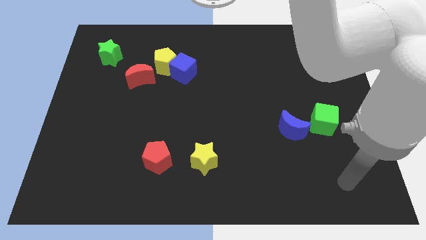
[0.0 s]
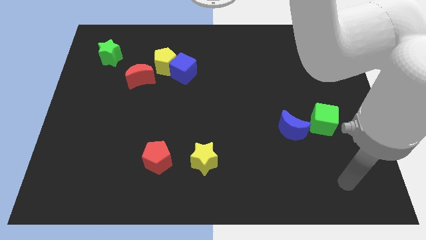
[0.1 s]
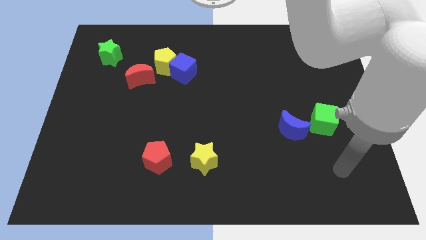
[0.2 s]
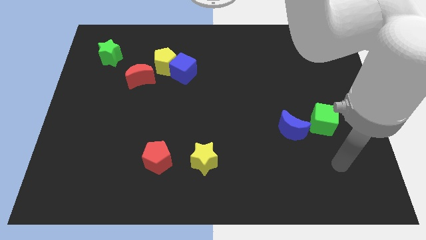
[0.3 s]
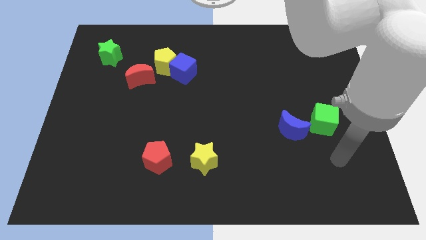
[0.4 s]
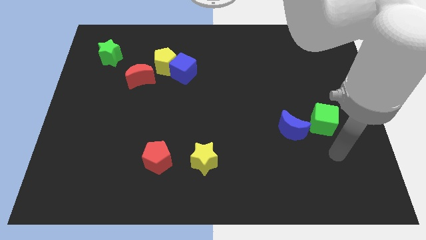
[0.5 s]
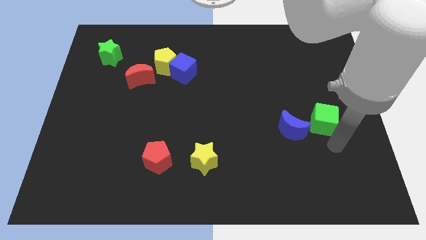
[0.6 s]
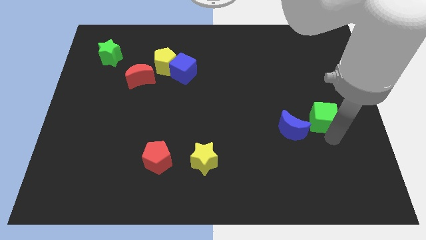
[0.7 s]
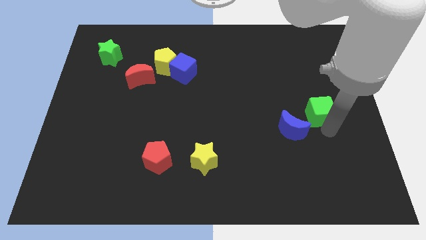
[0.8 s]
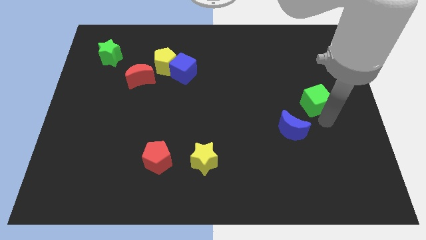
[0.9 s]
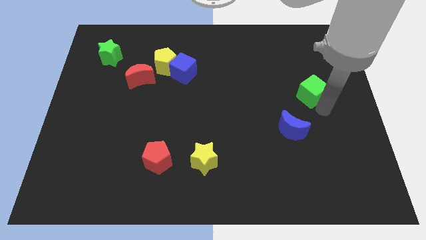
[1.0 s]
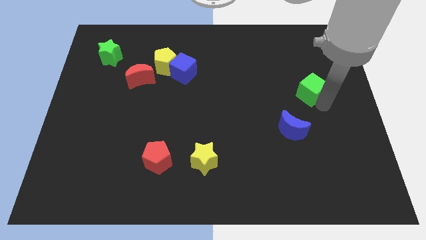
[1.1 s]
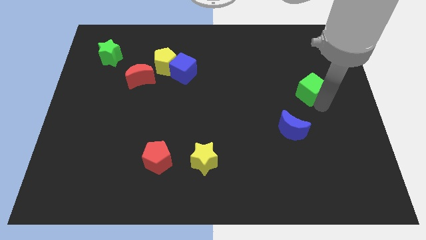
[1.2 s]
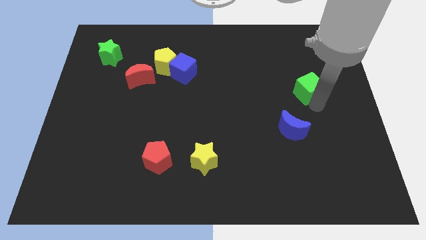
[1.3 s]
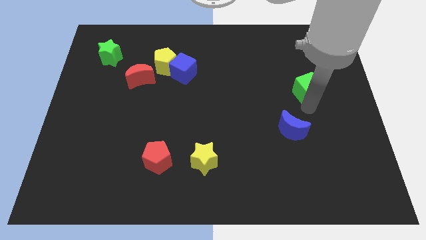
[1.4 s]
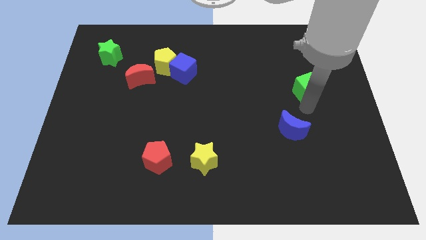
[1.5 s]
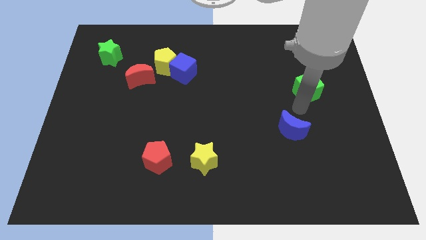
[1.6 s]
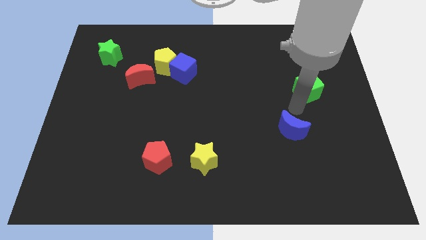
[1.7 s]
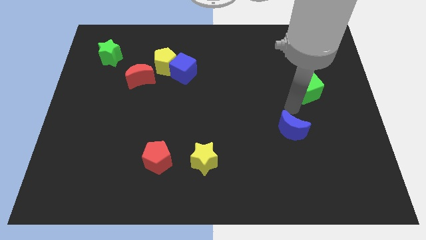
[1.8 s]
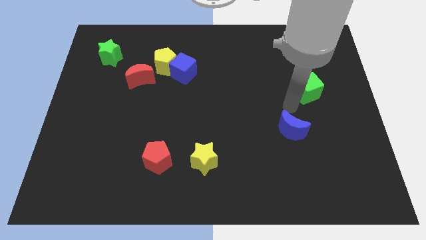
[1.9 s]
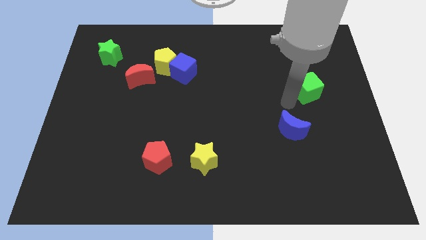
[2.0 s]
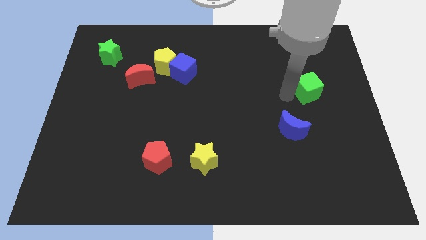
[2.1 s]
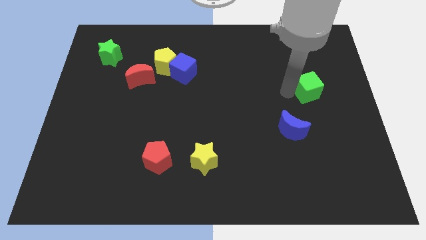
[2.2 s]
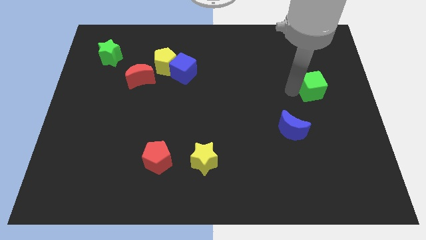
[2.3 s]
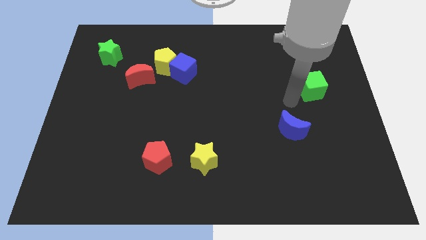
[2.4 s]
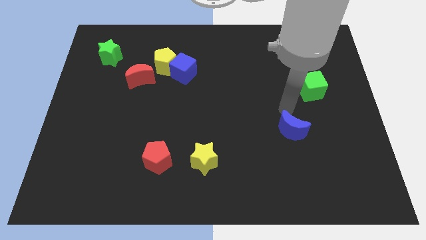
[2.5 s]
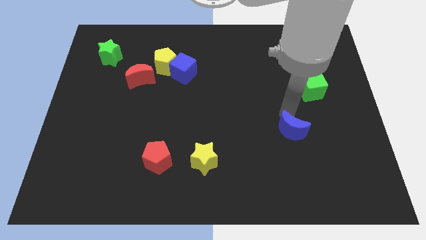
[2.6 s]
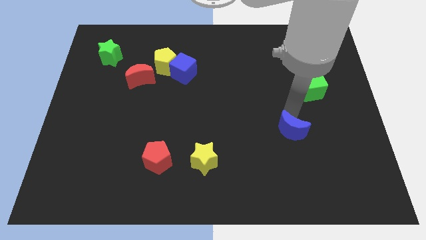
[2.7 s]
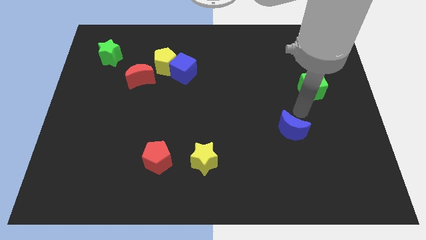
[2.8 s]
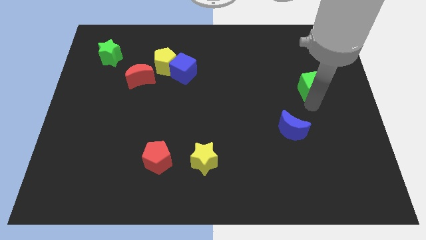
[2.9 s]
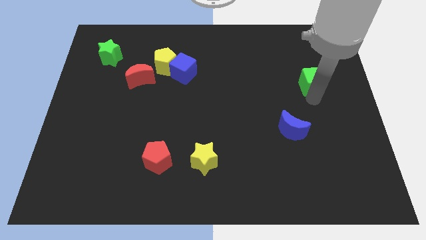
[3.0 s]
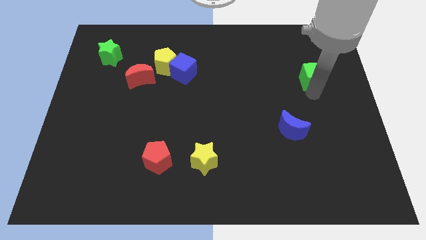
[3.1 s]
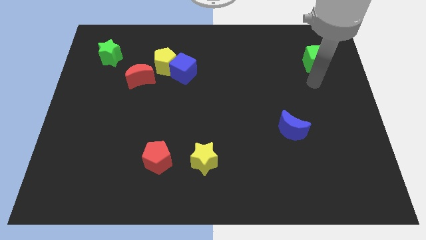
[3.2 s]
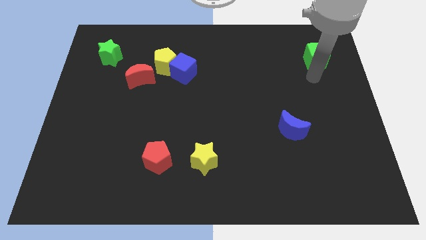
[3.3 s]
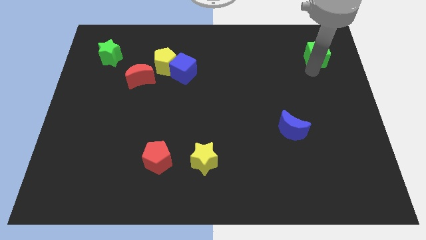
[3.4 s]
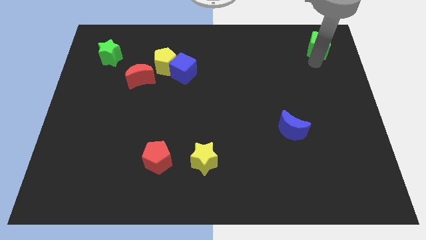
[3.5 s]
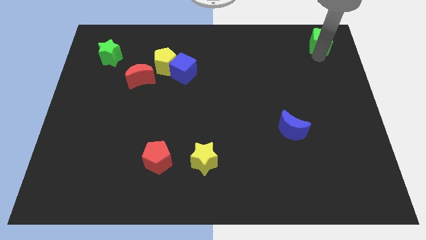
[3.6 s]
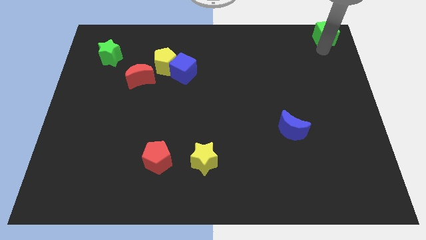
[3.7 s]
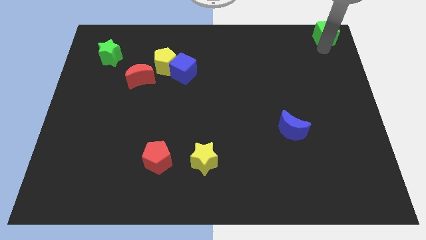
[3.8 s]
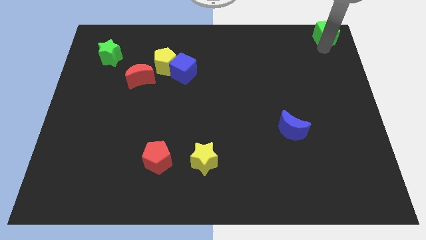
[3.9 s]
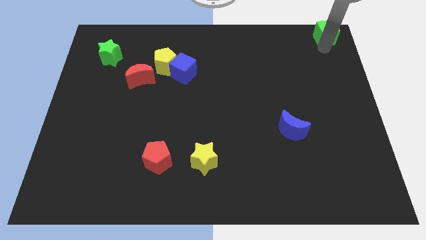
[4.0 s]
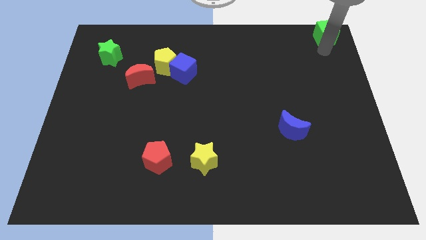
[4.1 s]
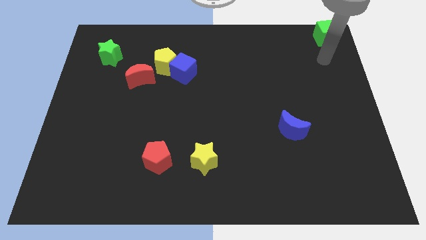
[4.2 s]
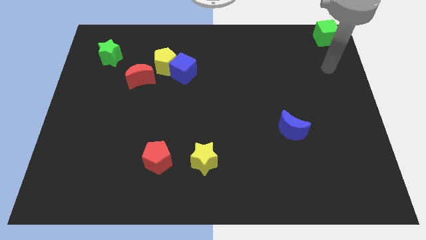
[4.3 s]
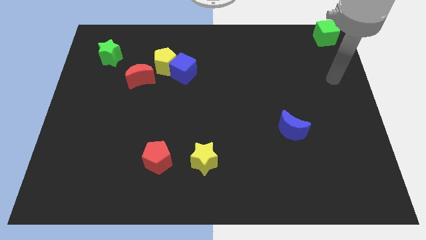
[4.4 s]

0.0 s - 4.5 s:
place the green cube at the top right corner of the board

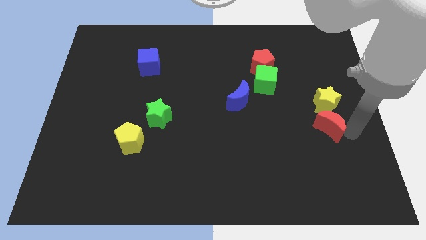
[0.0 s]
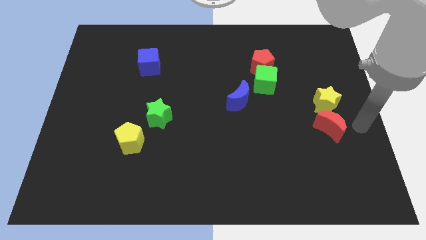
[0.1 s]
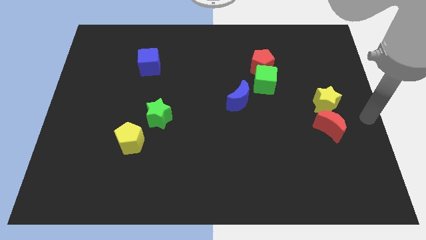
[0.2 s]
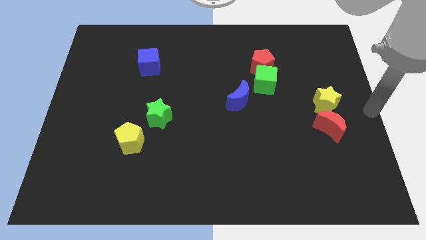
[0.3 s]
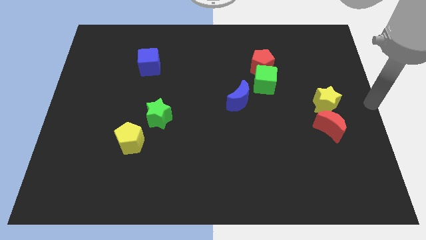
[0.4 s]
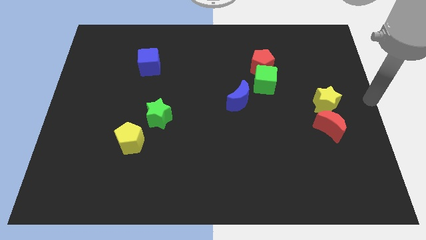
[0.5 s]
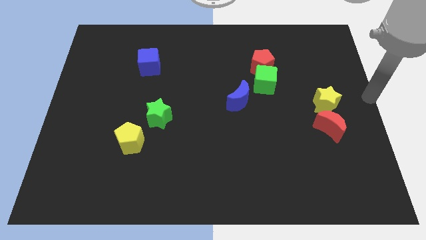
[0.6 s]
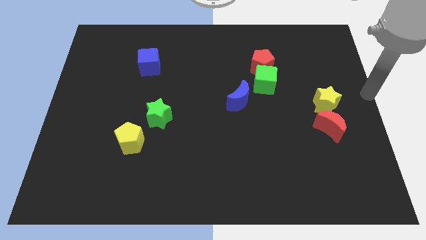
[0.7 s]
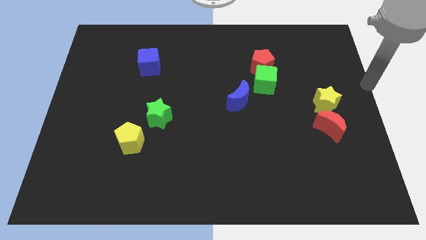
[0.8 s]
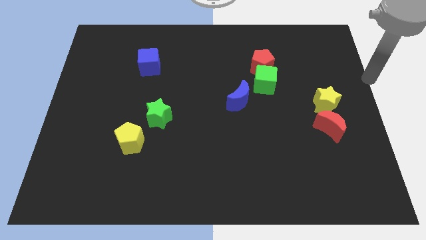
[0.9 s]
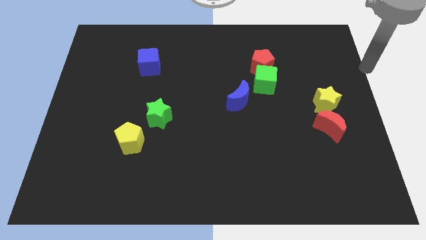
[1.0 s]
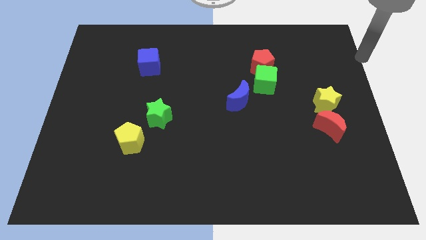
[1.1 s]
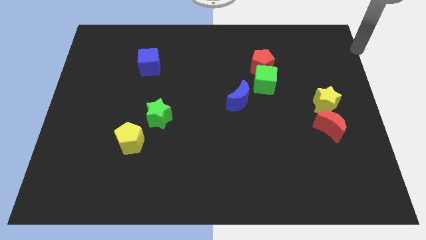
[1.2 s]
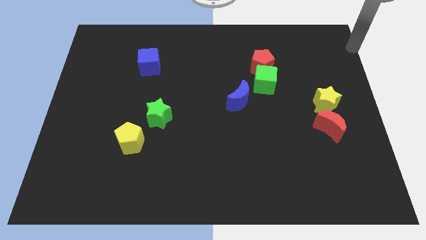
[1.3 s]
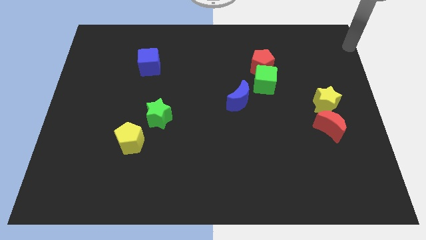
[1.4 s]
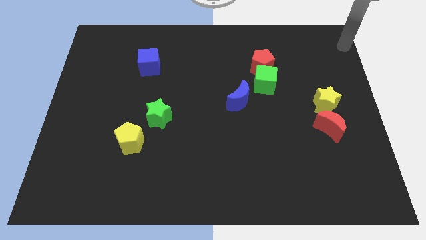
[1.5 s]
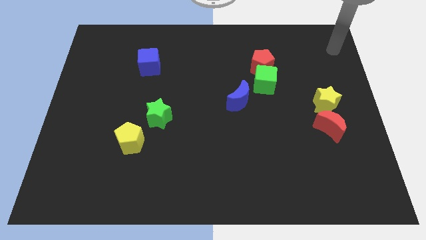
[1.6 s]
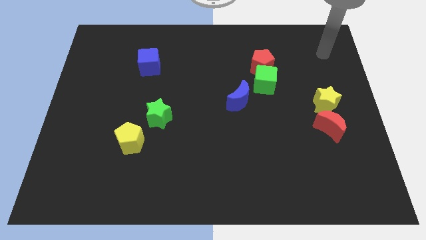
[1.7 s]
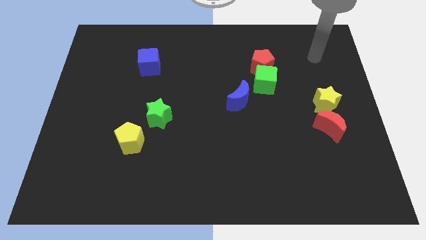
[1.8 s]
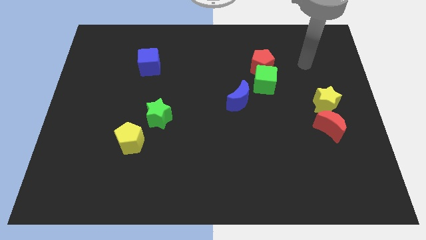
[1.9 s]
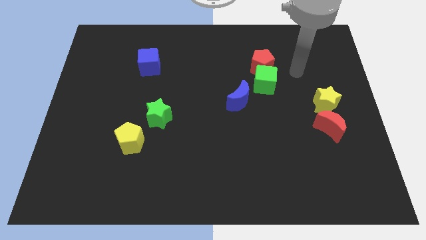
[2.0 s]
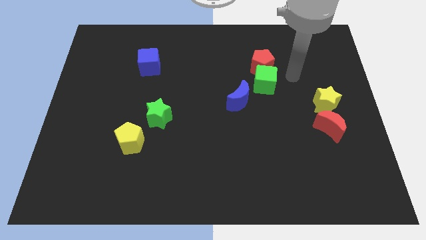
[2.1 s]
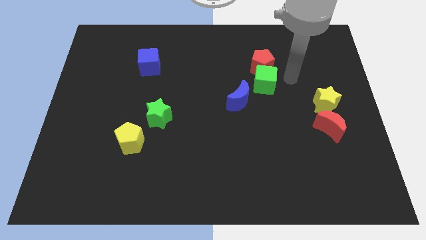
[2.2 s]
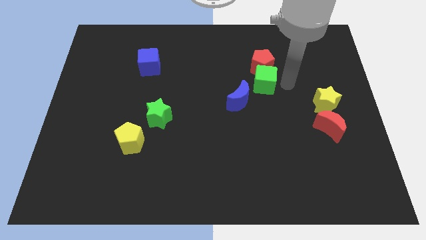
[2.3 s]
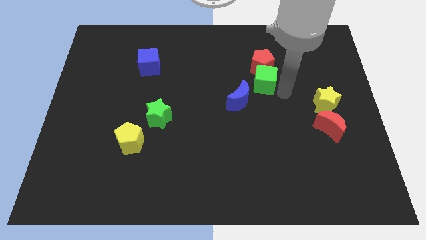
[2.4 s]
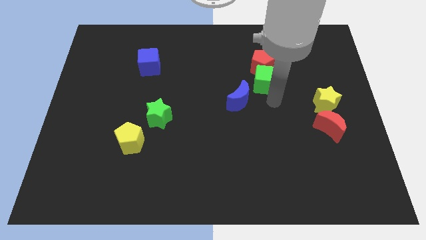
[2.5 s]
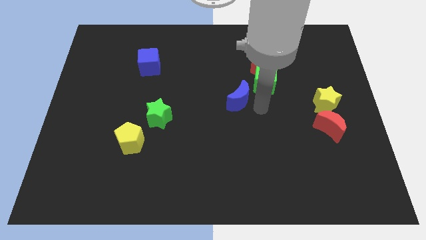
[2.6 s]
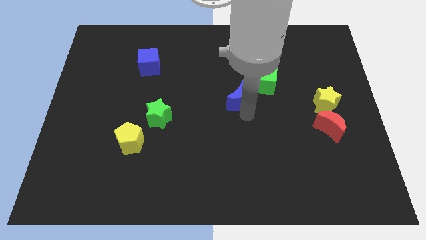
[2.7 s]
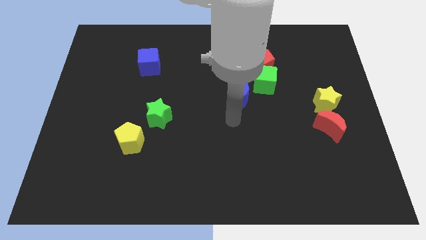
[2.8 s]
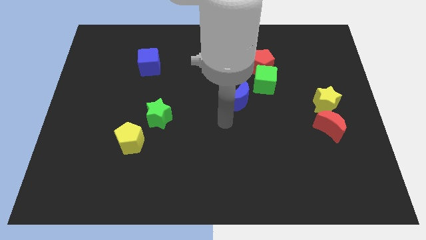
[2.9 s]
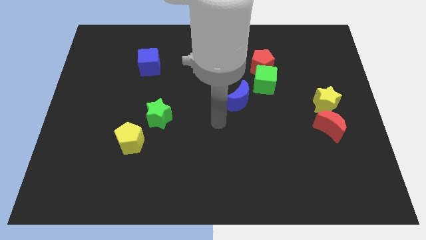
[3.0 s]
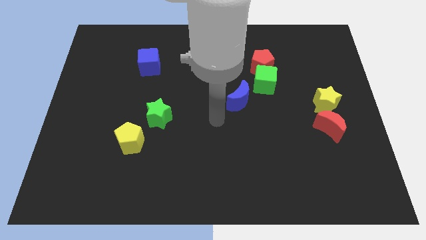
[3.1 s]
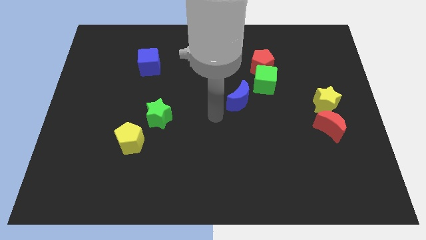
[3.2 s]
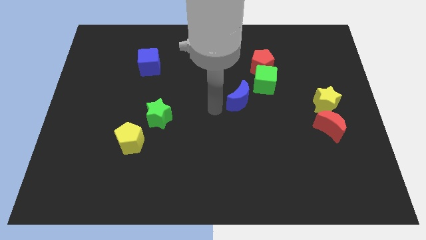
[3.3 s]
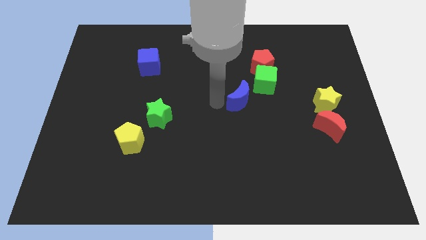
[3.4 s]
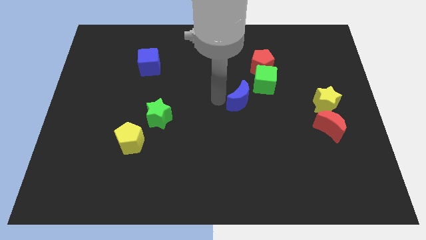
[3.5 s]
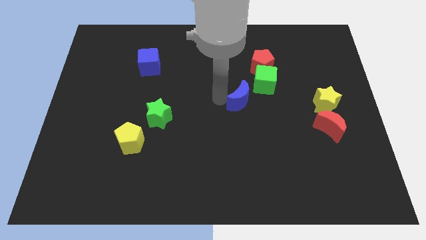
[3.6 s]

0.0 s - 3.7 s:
move your arm away from the red moon

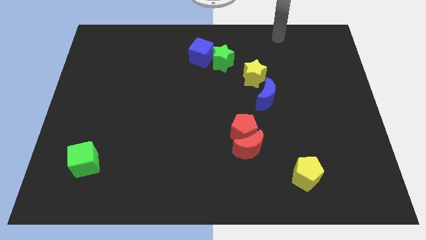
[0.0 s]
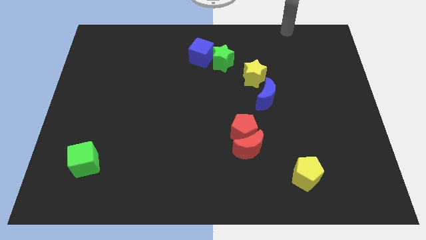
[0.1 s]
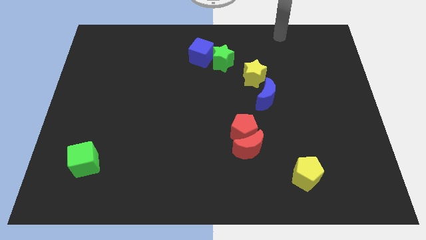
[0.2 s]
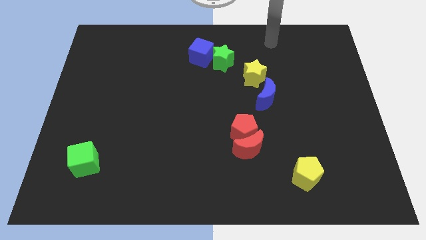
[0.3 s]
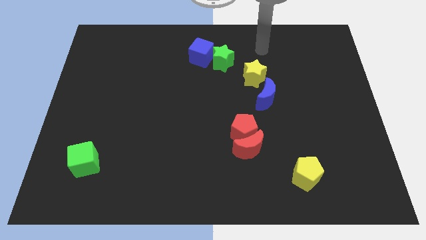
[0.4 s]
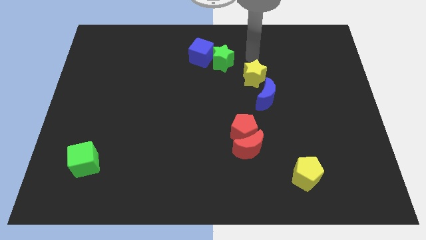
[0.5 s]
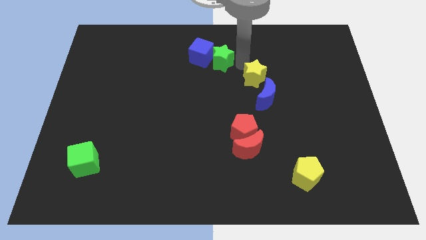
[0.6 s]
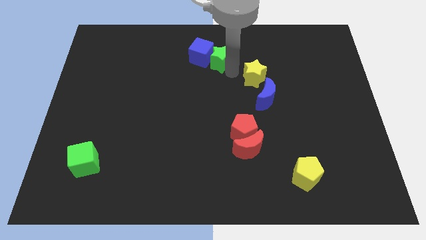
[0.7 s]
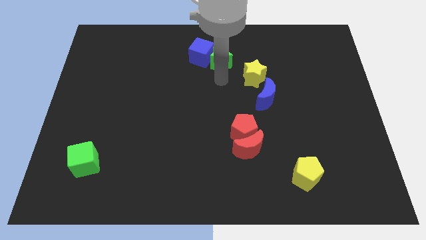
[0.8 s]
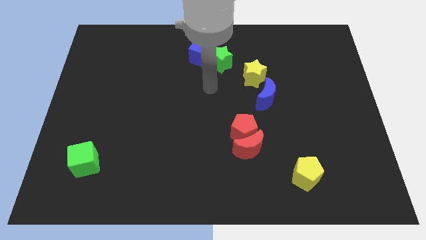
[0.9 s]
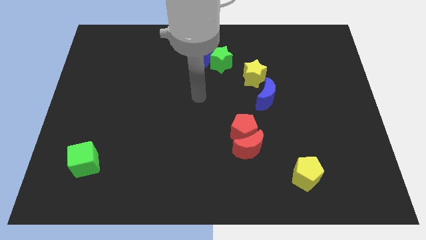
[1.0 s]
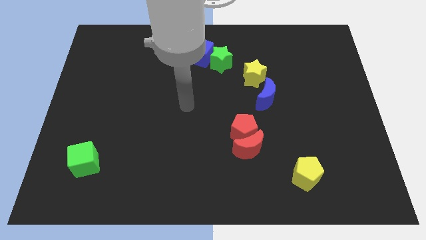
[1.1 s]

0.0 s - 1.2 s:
move your arm to the left of the blue moon
